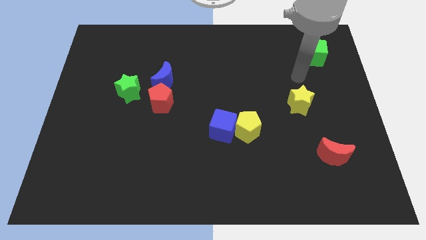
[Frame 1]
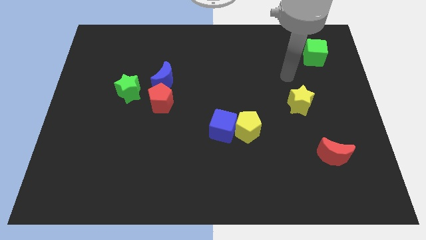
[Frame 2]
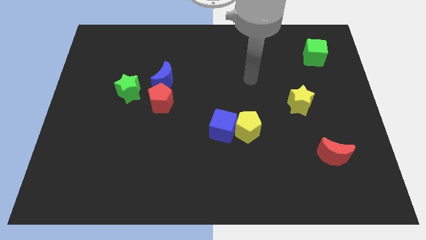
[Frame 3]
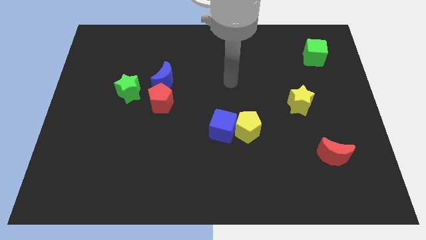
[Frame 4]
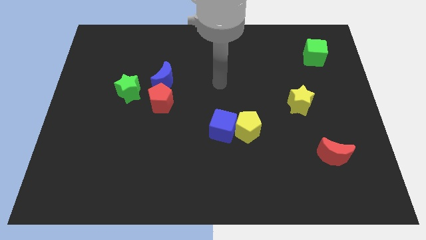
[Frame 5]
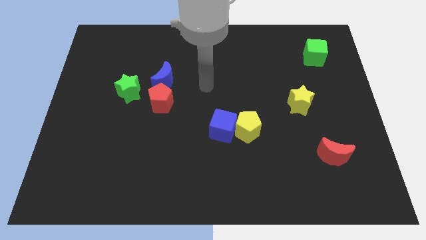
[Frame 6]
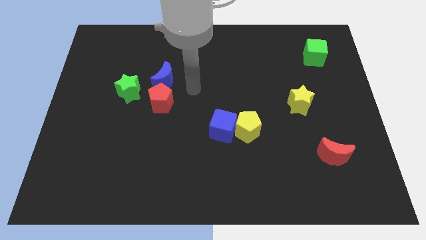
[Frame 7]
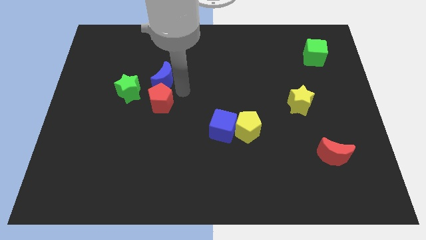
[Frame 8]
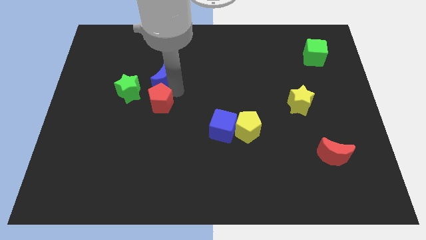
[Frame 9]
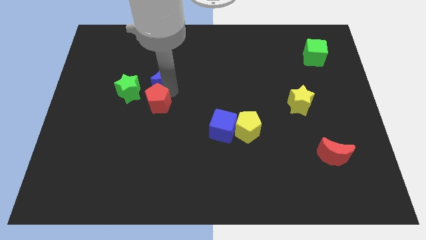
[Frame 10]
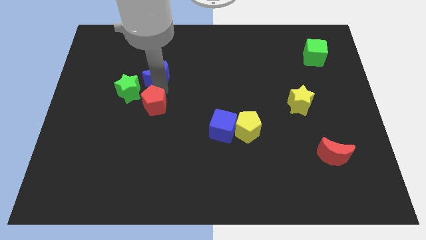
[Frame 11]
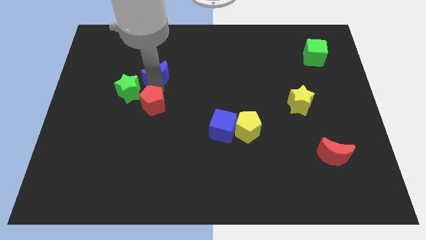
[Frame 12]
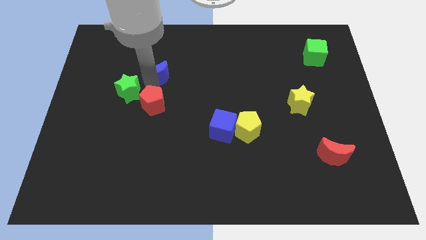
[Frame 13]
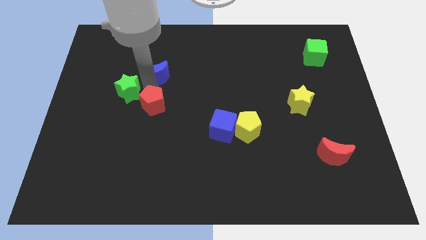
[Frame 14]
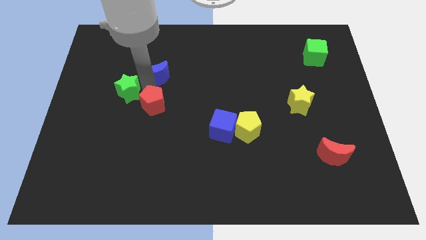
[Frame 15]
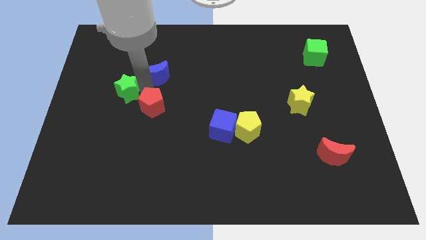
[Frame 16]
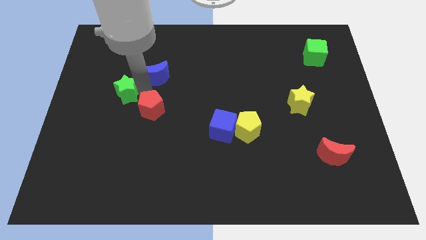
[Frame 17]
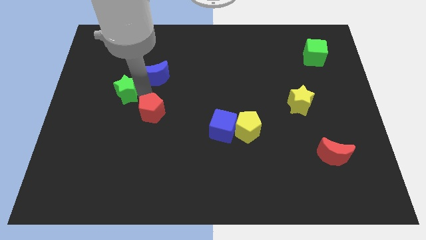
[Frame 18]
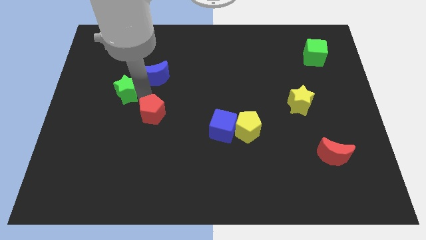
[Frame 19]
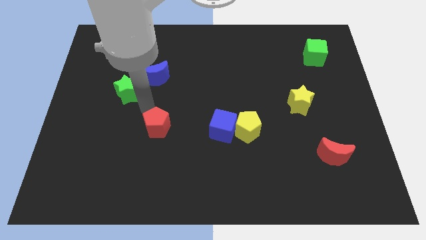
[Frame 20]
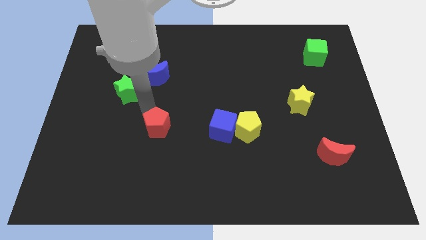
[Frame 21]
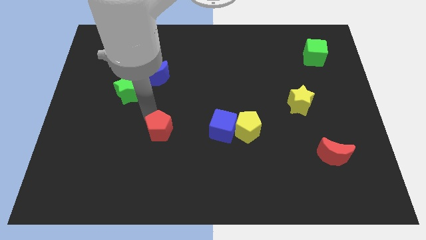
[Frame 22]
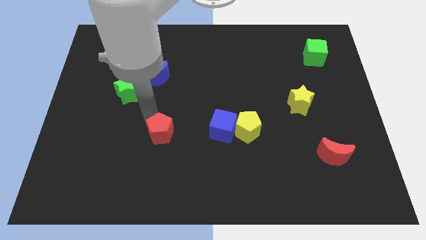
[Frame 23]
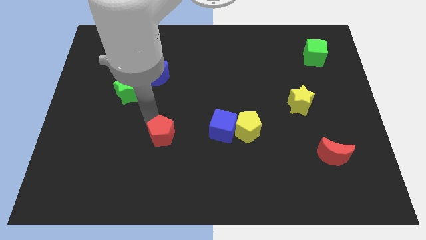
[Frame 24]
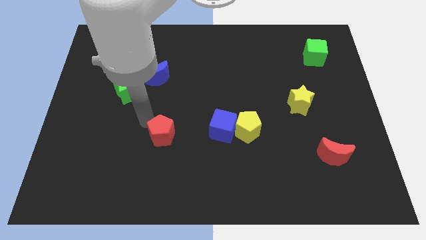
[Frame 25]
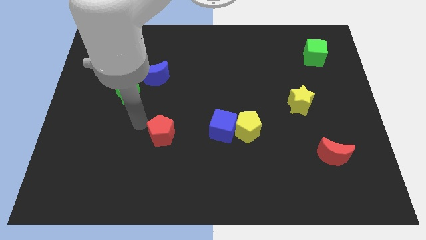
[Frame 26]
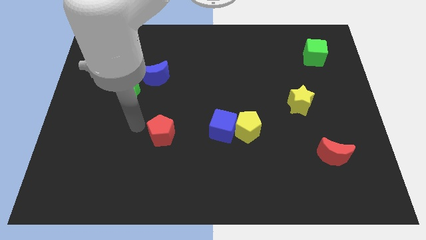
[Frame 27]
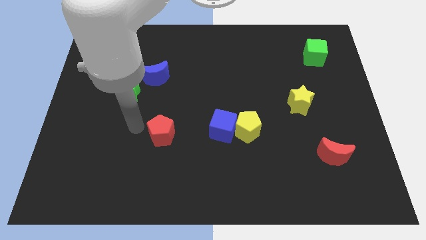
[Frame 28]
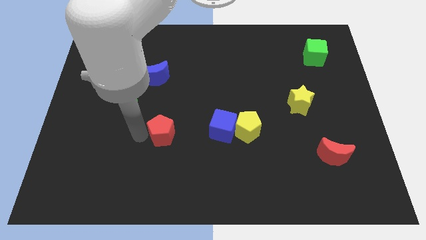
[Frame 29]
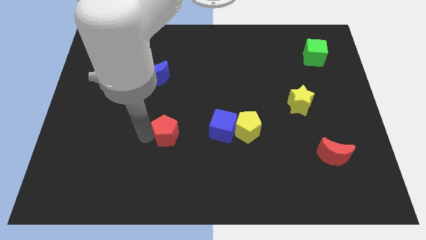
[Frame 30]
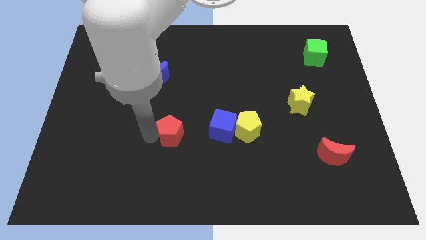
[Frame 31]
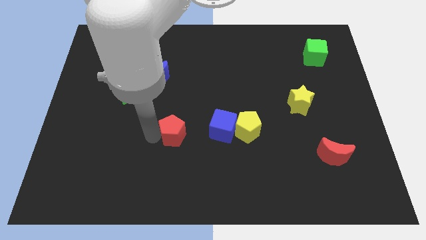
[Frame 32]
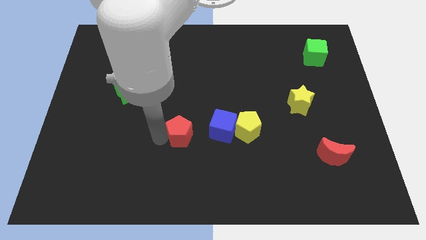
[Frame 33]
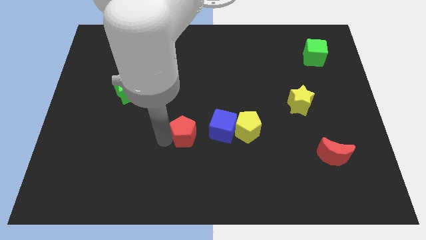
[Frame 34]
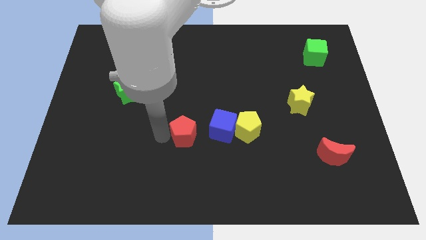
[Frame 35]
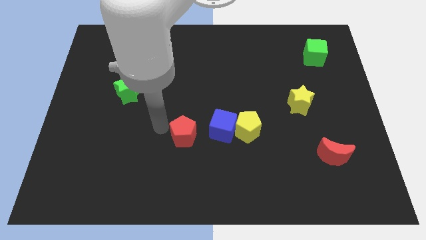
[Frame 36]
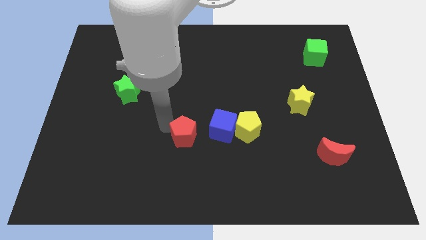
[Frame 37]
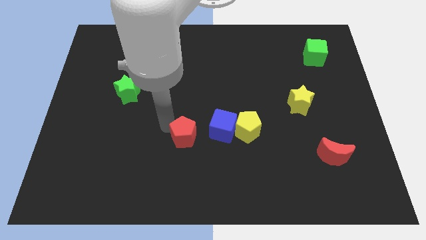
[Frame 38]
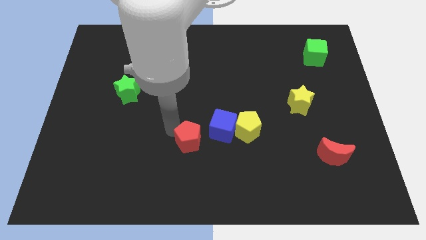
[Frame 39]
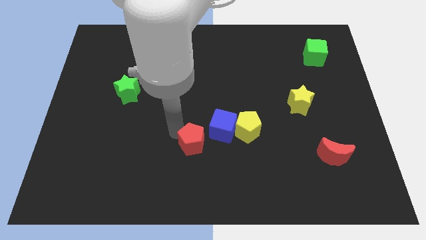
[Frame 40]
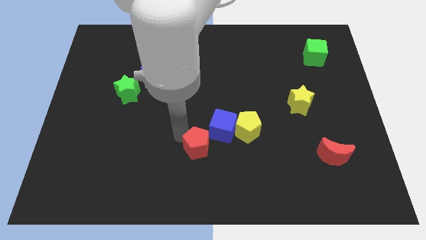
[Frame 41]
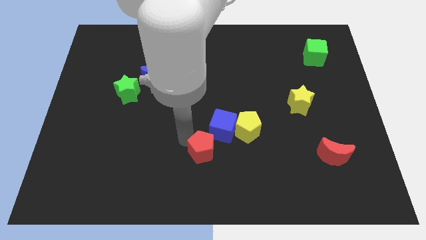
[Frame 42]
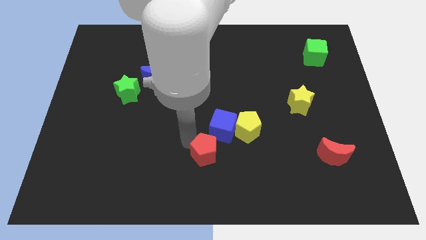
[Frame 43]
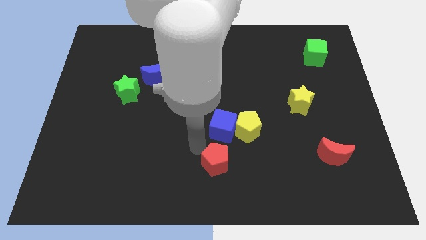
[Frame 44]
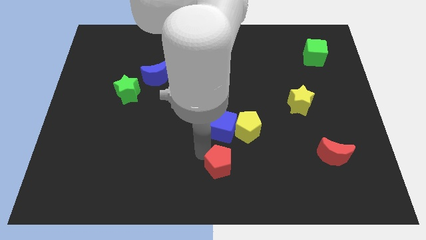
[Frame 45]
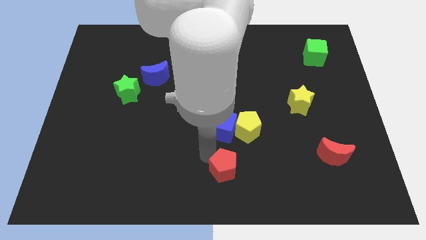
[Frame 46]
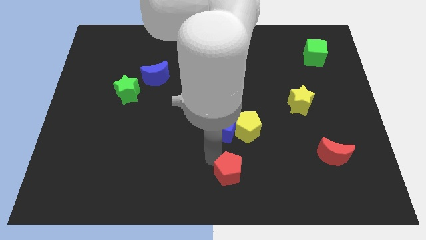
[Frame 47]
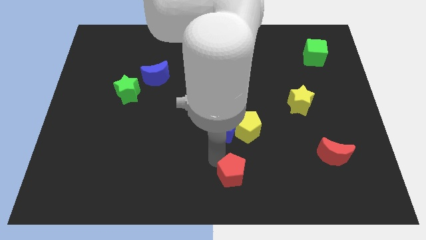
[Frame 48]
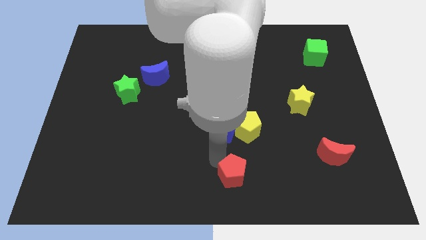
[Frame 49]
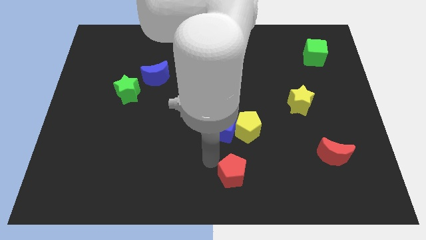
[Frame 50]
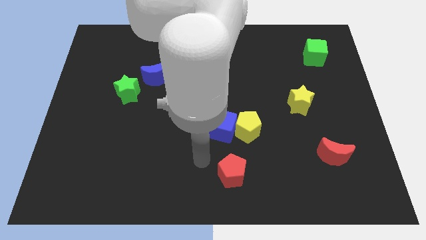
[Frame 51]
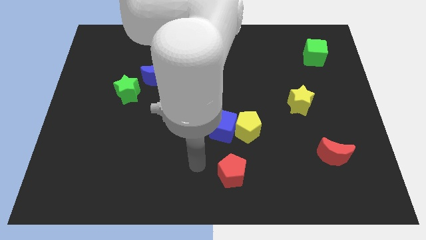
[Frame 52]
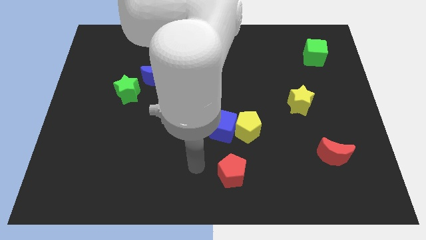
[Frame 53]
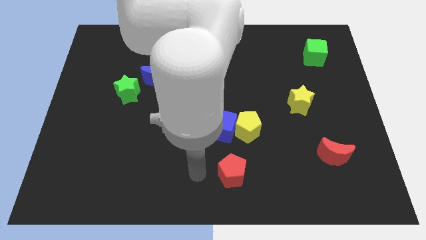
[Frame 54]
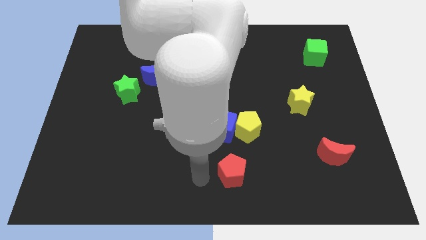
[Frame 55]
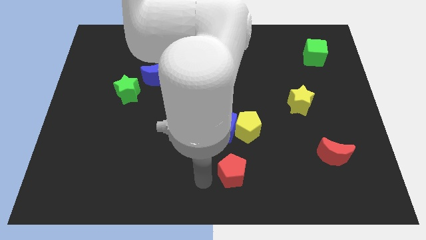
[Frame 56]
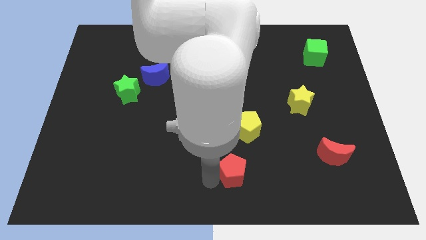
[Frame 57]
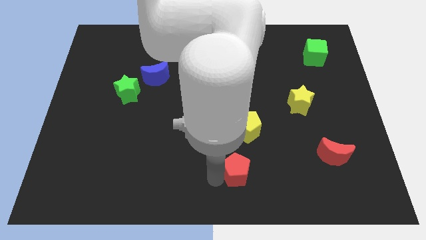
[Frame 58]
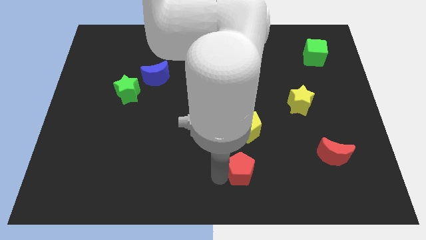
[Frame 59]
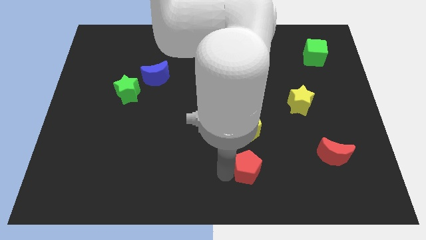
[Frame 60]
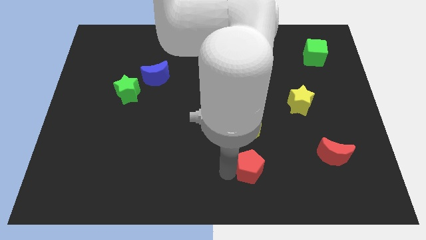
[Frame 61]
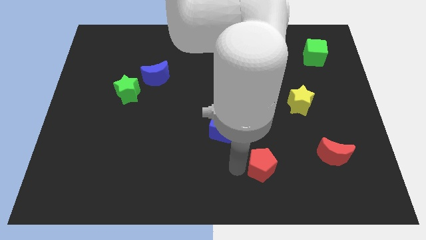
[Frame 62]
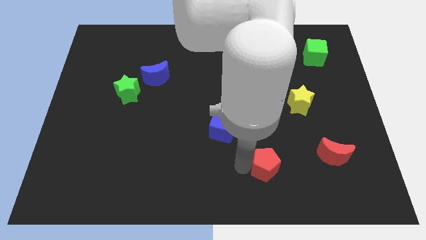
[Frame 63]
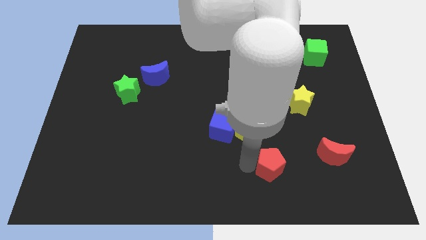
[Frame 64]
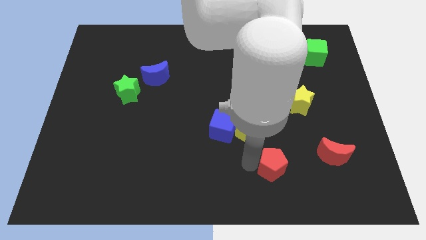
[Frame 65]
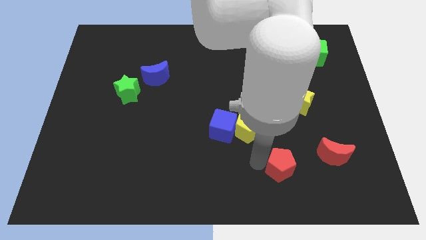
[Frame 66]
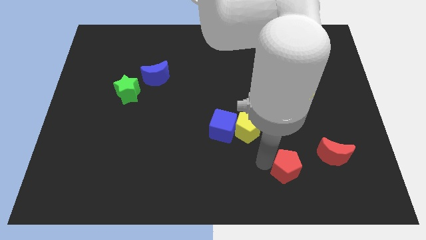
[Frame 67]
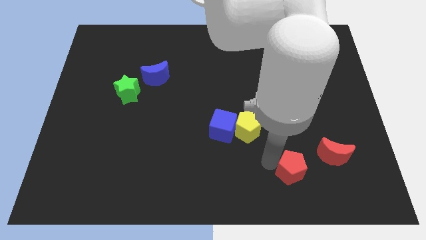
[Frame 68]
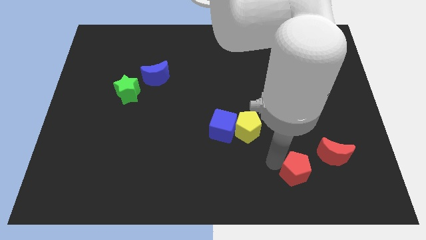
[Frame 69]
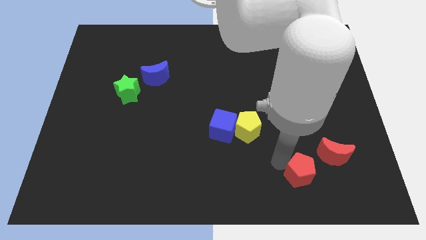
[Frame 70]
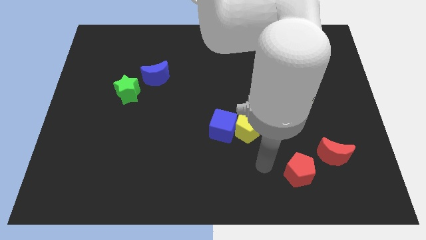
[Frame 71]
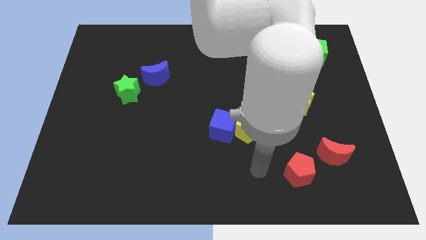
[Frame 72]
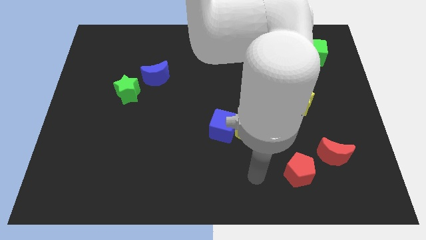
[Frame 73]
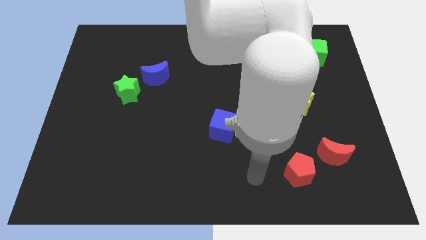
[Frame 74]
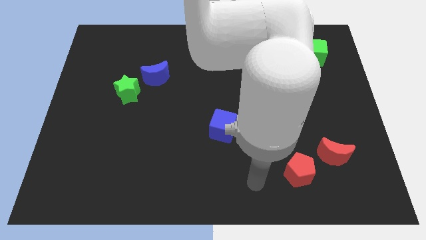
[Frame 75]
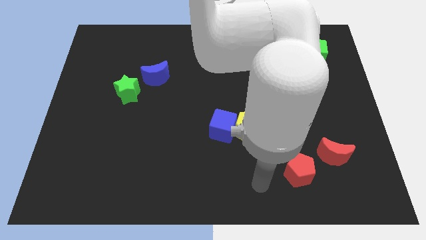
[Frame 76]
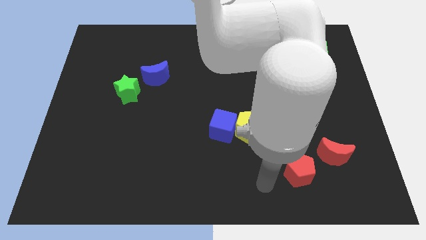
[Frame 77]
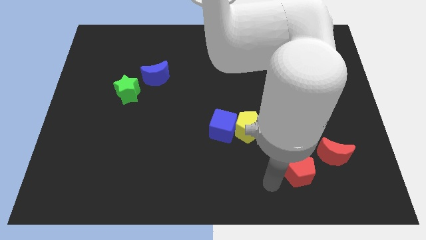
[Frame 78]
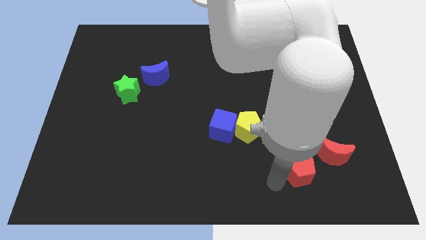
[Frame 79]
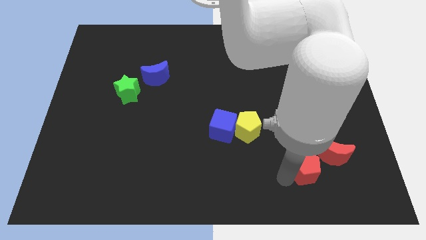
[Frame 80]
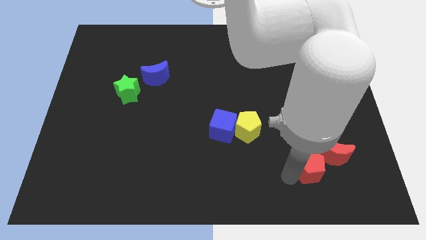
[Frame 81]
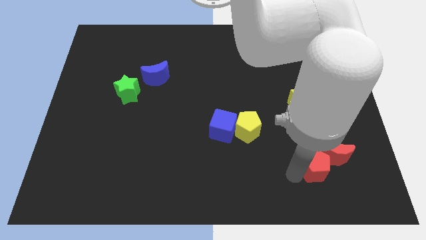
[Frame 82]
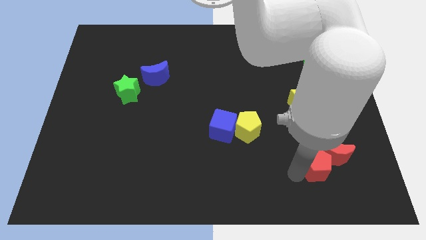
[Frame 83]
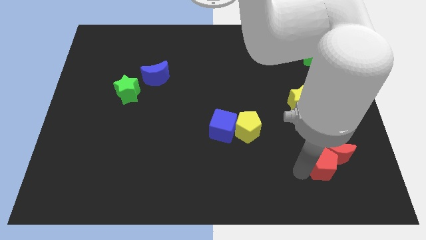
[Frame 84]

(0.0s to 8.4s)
put the red pentagon to the red moon
